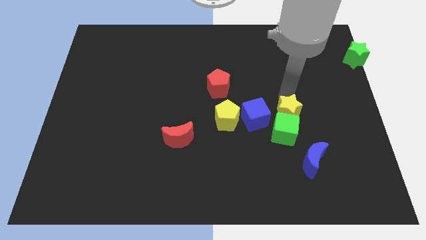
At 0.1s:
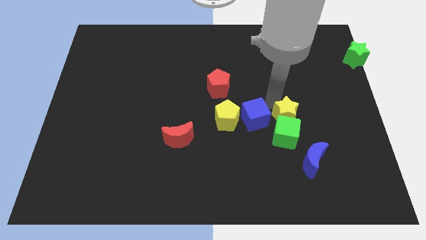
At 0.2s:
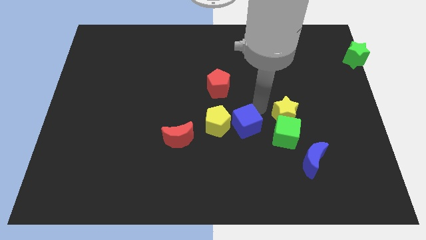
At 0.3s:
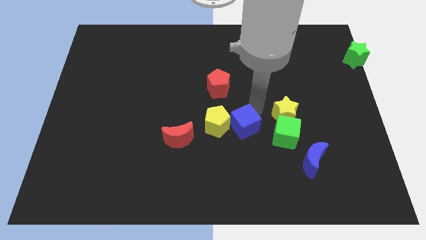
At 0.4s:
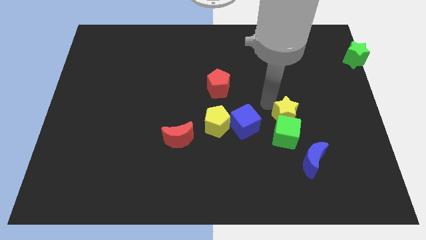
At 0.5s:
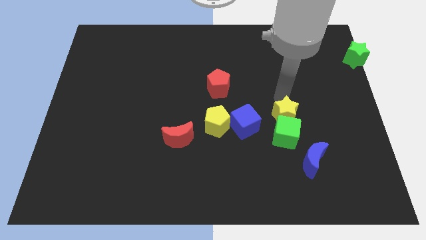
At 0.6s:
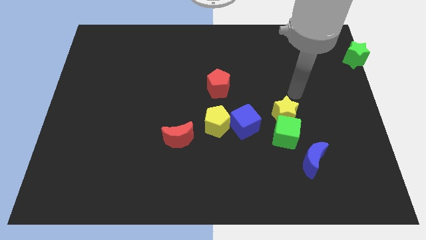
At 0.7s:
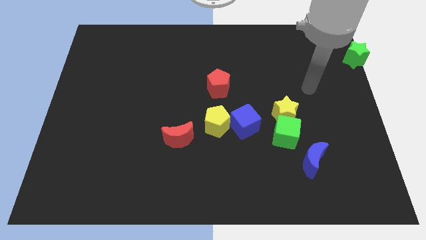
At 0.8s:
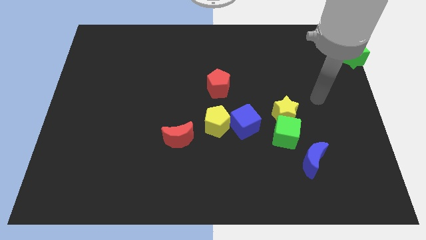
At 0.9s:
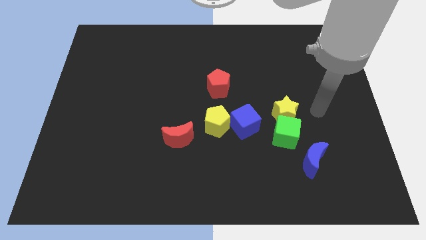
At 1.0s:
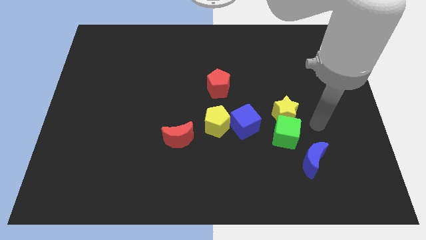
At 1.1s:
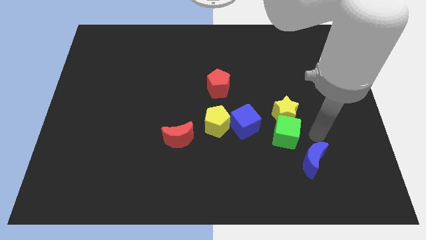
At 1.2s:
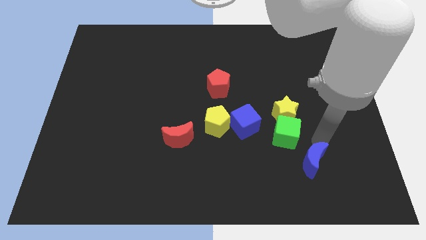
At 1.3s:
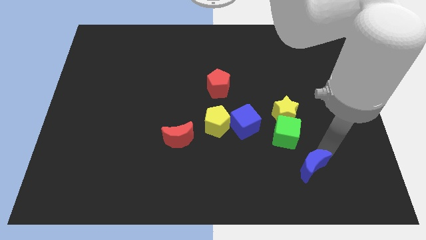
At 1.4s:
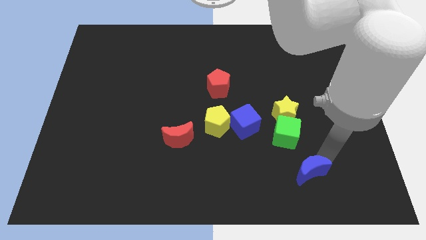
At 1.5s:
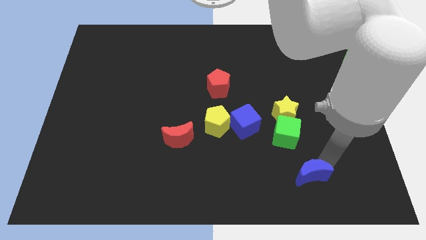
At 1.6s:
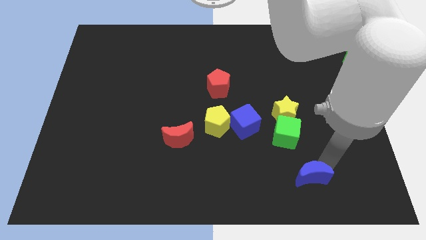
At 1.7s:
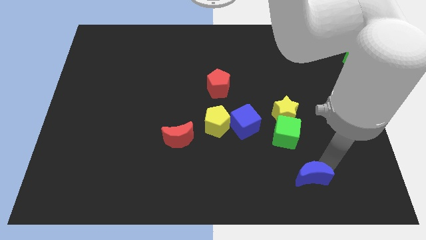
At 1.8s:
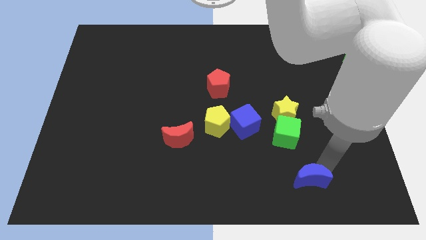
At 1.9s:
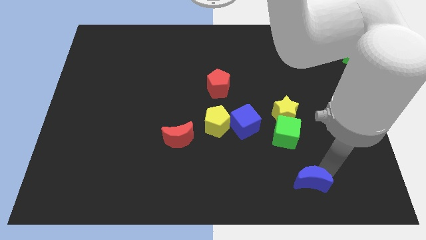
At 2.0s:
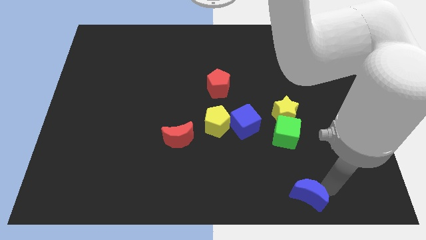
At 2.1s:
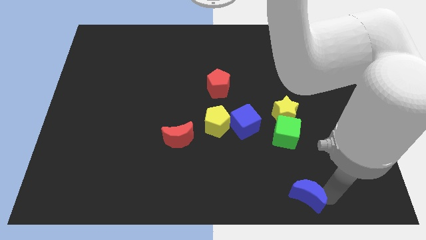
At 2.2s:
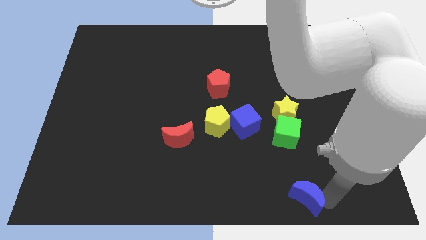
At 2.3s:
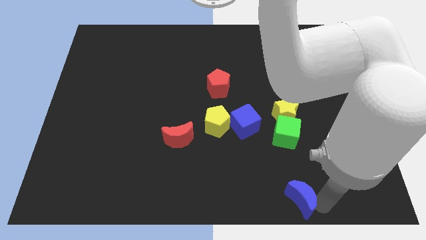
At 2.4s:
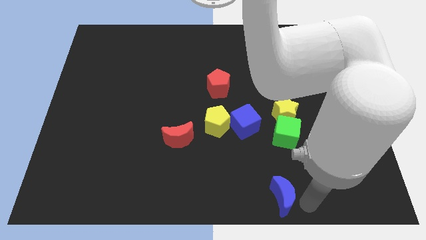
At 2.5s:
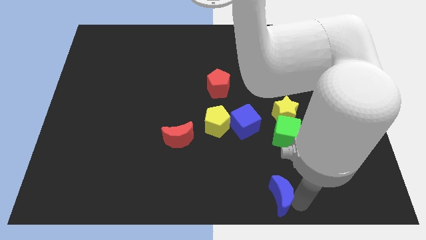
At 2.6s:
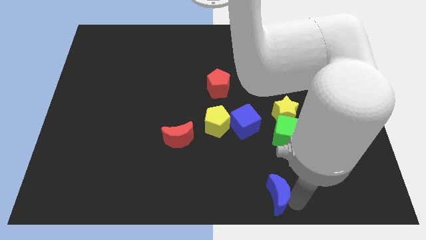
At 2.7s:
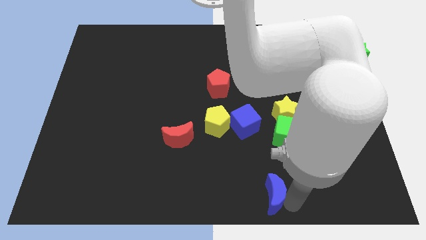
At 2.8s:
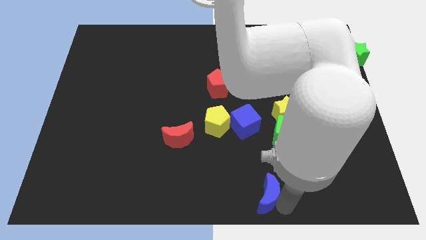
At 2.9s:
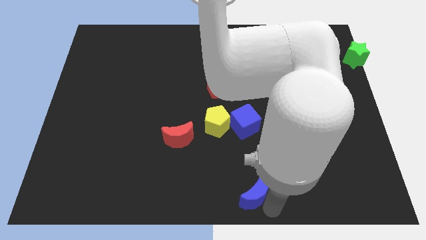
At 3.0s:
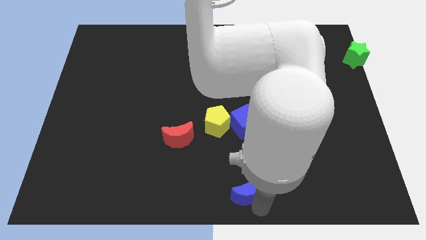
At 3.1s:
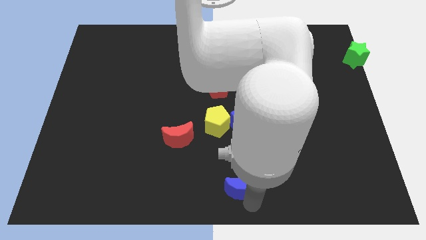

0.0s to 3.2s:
move the blue moon below the blue cube

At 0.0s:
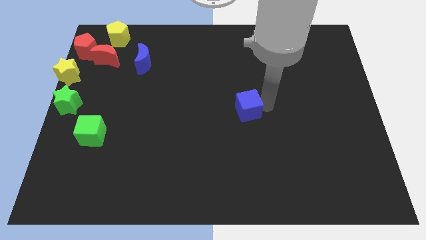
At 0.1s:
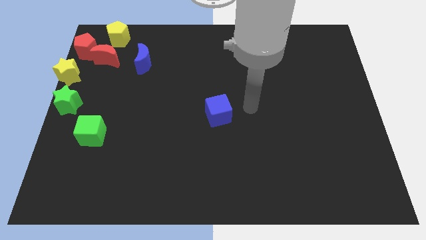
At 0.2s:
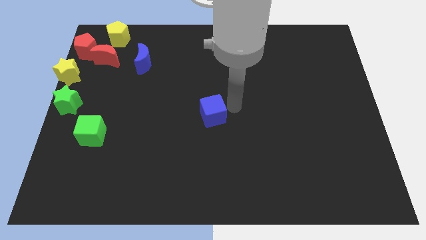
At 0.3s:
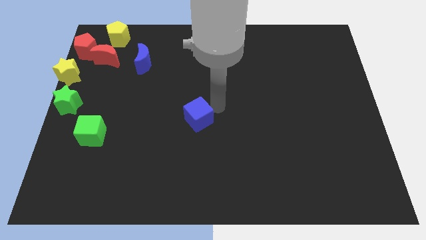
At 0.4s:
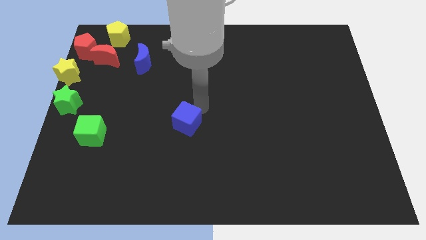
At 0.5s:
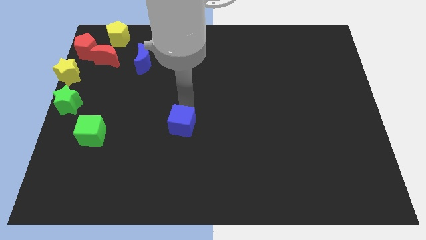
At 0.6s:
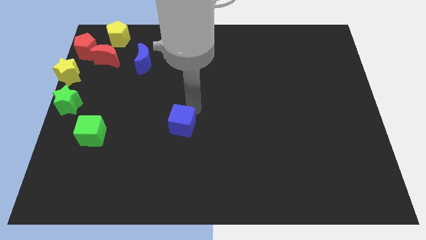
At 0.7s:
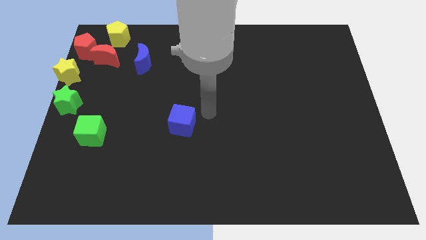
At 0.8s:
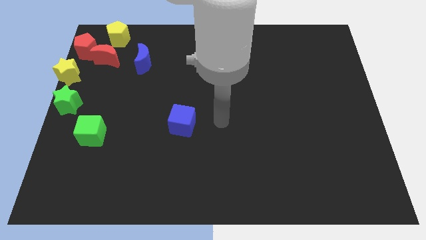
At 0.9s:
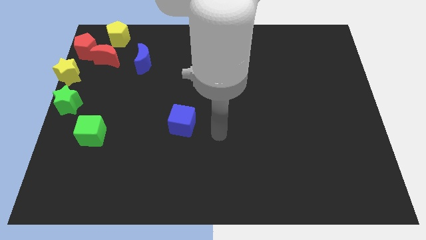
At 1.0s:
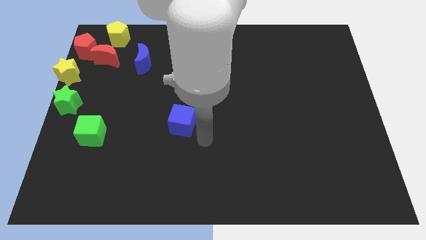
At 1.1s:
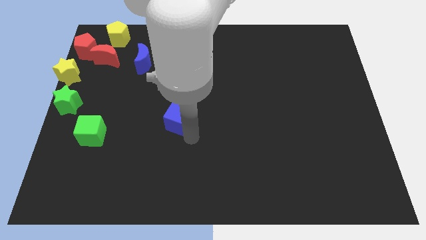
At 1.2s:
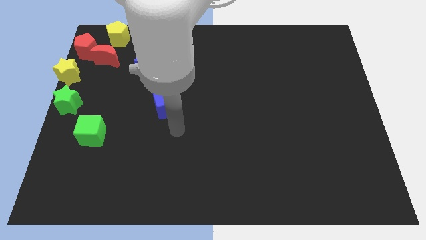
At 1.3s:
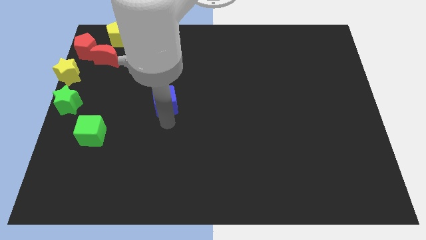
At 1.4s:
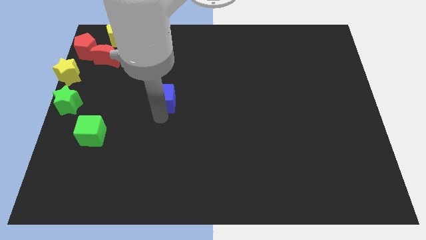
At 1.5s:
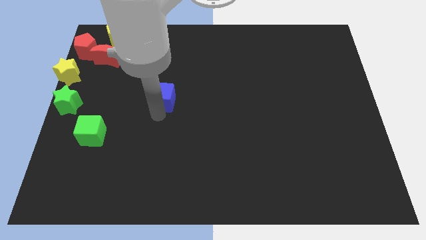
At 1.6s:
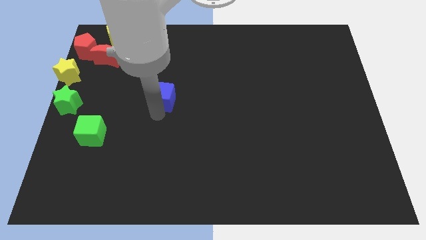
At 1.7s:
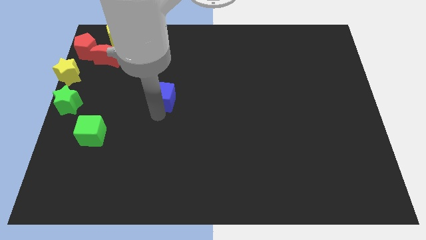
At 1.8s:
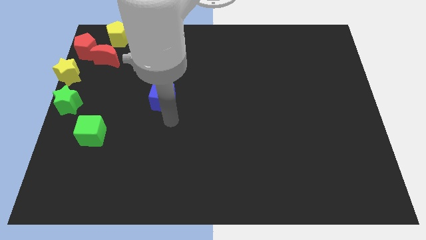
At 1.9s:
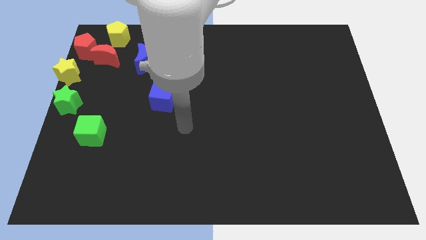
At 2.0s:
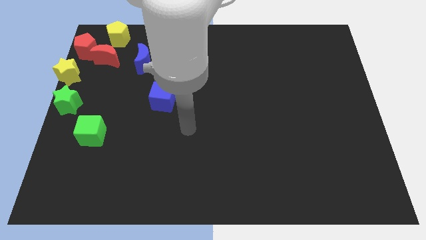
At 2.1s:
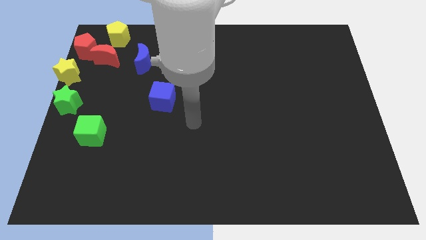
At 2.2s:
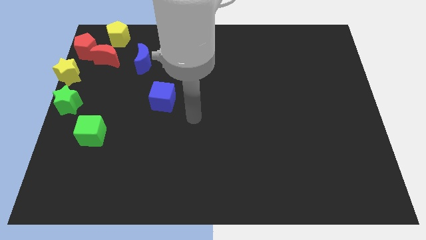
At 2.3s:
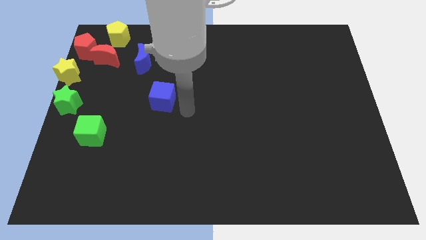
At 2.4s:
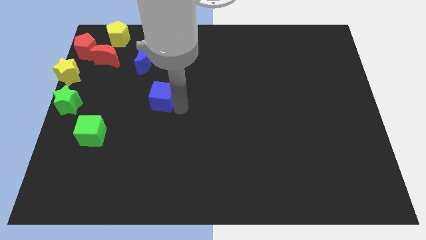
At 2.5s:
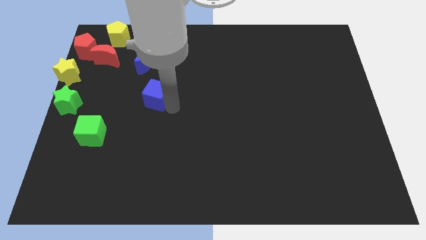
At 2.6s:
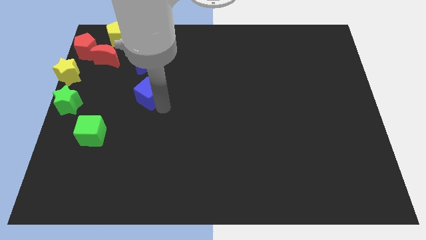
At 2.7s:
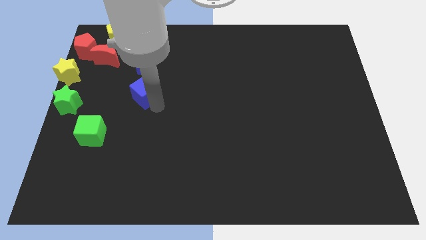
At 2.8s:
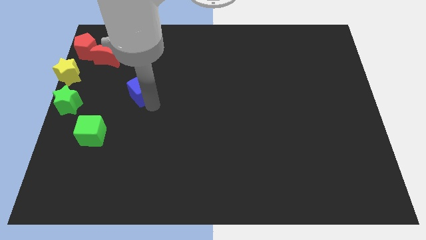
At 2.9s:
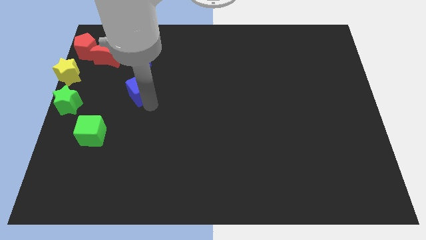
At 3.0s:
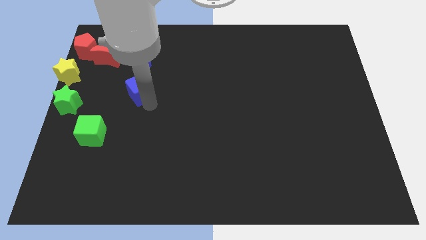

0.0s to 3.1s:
place blue cube below to the blue crescent

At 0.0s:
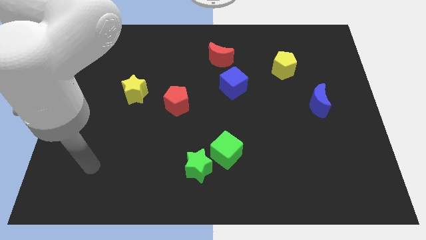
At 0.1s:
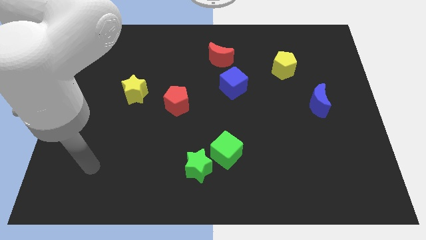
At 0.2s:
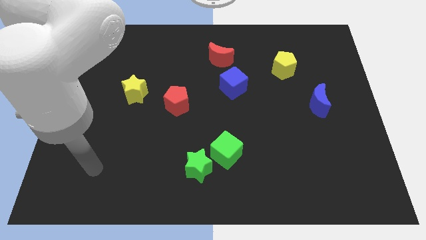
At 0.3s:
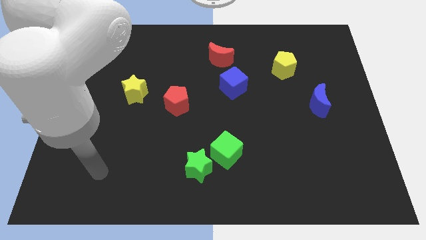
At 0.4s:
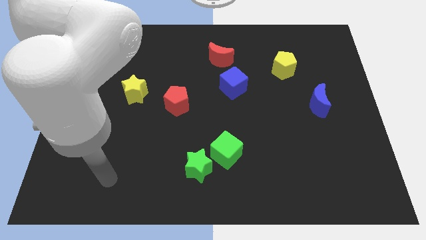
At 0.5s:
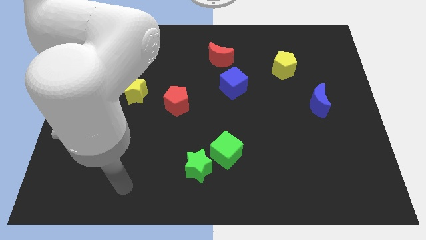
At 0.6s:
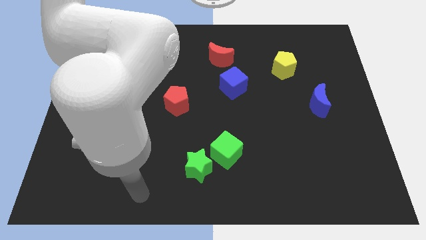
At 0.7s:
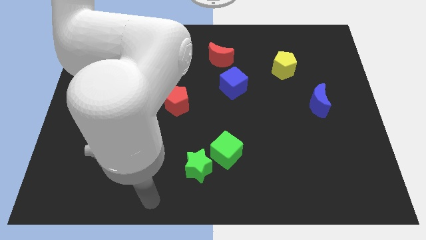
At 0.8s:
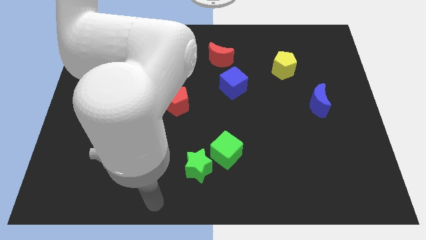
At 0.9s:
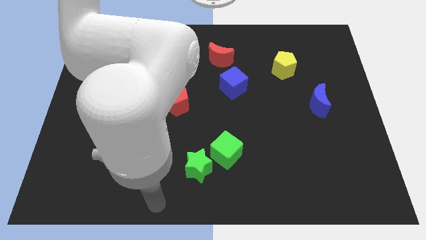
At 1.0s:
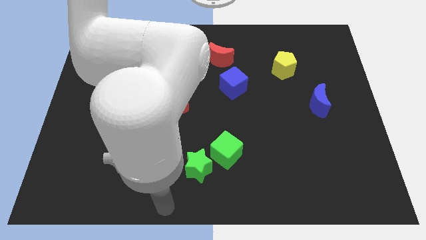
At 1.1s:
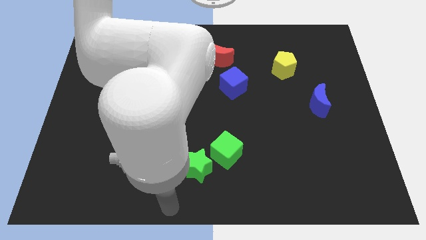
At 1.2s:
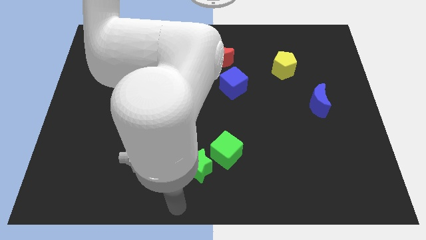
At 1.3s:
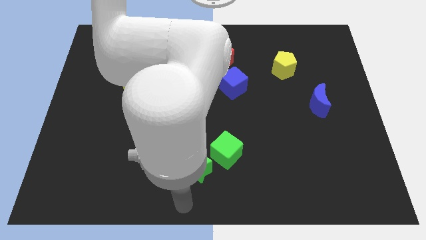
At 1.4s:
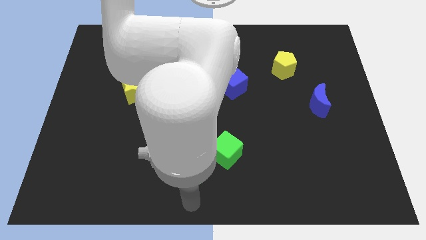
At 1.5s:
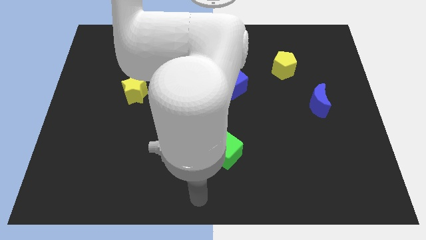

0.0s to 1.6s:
place your arm below to the green star

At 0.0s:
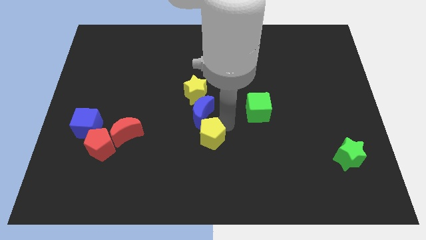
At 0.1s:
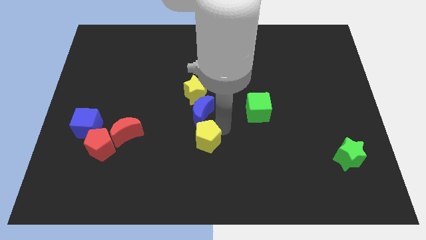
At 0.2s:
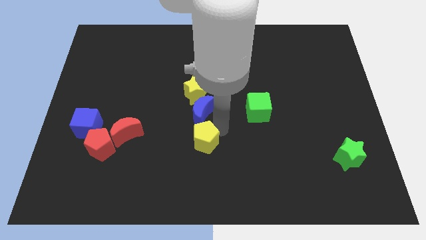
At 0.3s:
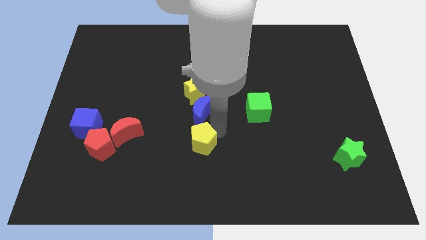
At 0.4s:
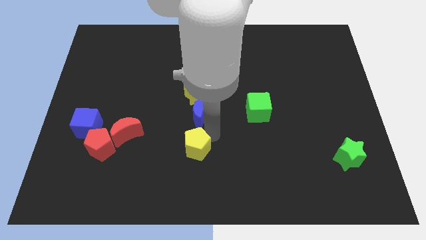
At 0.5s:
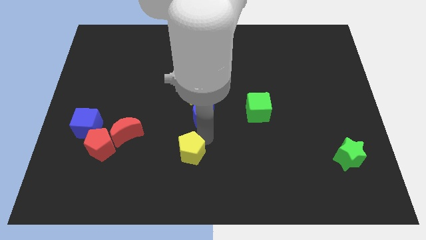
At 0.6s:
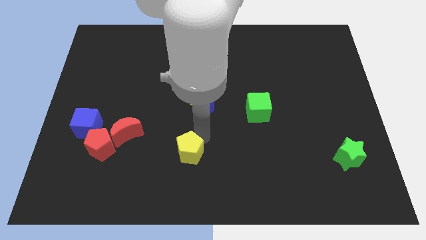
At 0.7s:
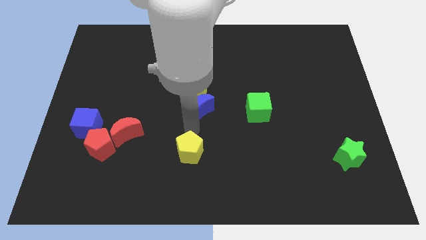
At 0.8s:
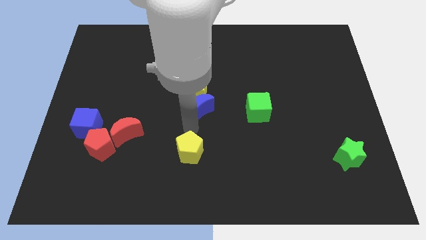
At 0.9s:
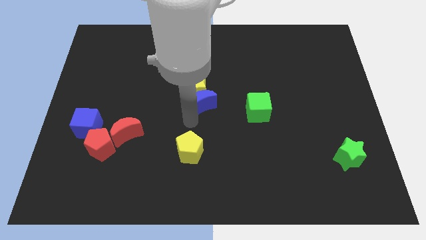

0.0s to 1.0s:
place the yellow pentagon right to the red moon

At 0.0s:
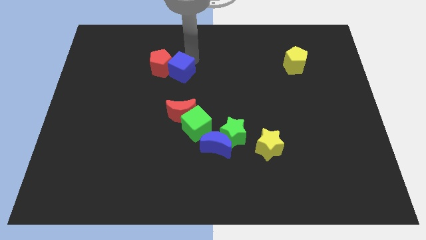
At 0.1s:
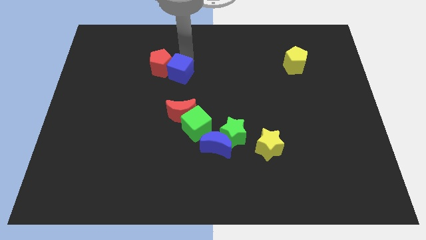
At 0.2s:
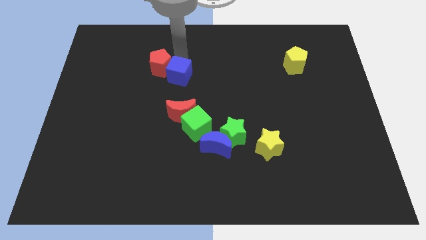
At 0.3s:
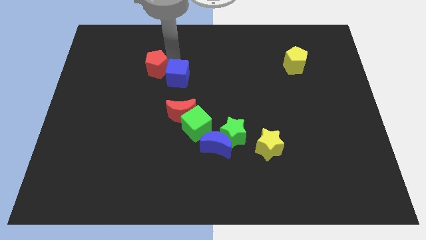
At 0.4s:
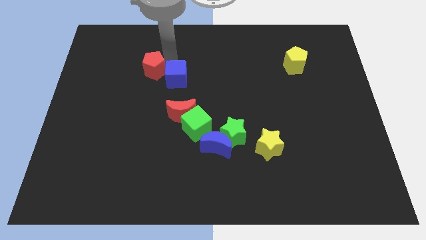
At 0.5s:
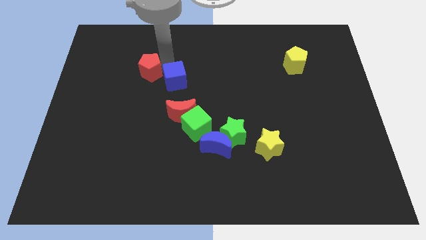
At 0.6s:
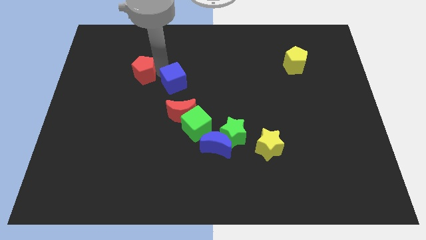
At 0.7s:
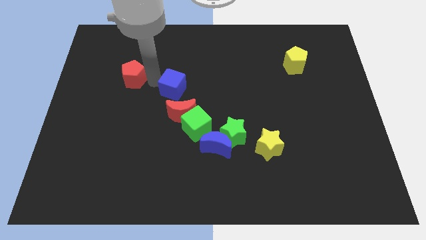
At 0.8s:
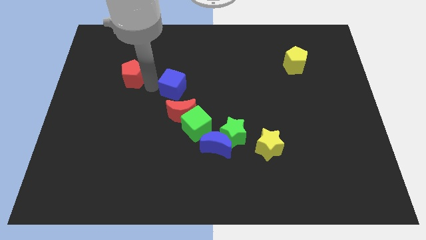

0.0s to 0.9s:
separate the blue cube from the red pentagon
